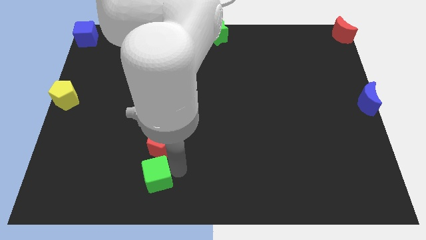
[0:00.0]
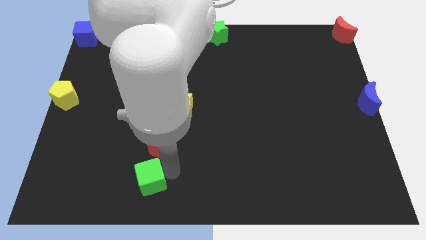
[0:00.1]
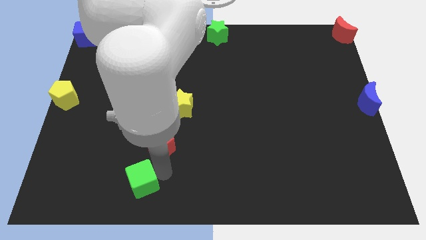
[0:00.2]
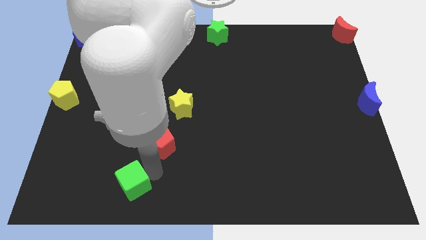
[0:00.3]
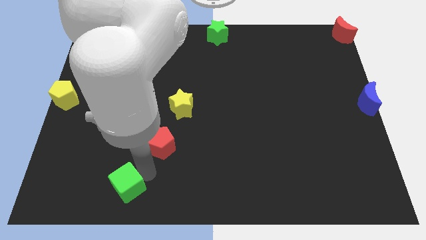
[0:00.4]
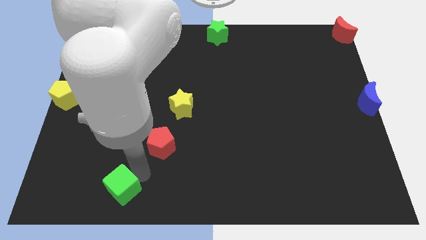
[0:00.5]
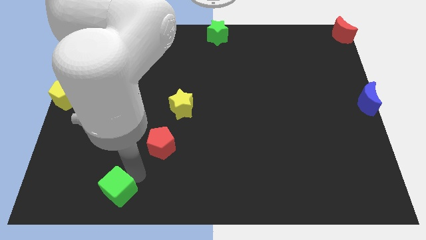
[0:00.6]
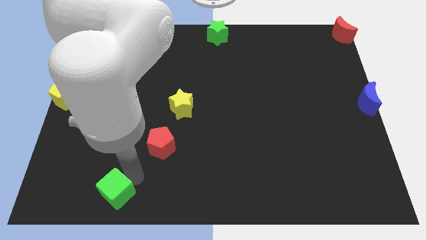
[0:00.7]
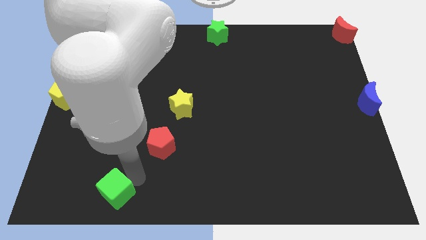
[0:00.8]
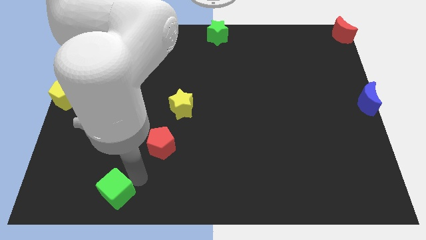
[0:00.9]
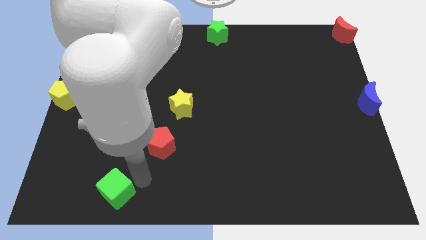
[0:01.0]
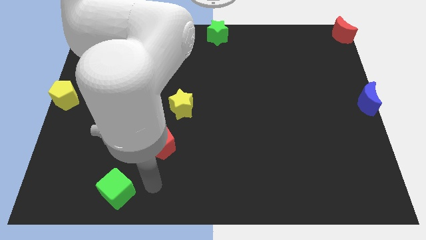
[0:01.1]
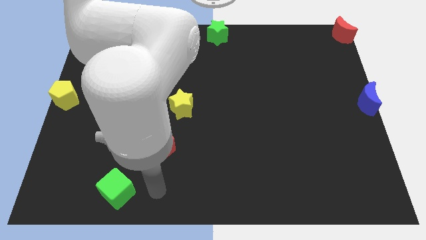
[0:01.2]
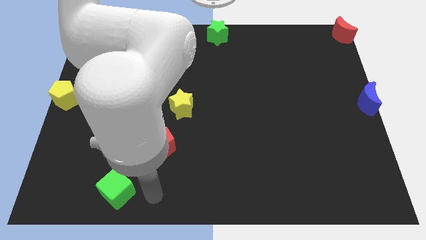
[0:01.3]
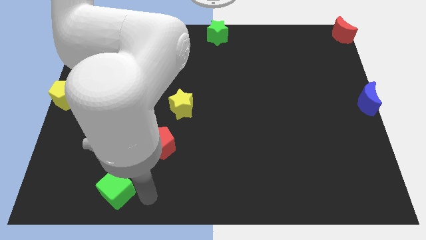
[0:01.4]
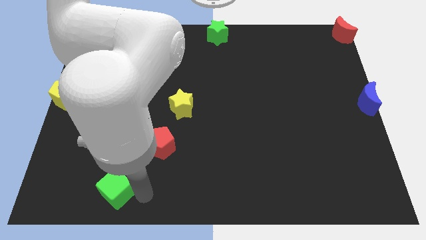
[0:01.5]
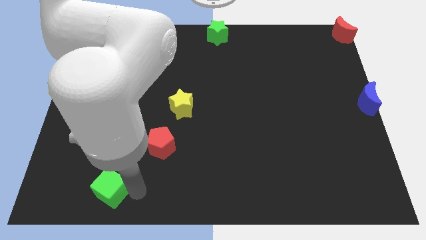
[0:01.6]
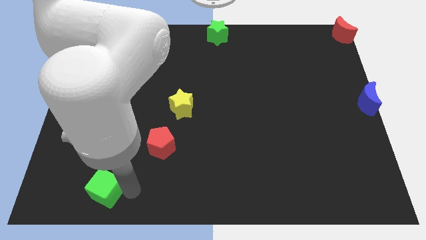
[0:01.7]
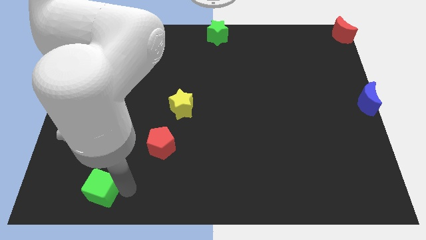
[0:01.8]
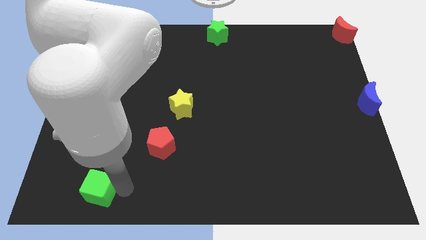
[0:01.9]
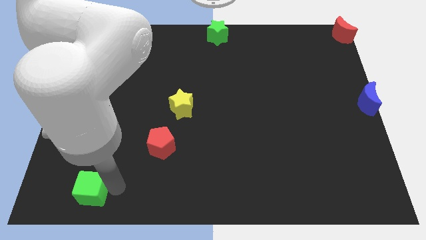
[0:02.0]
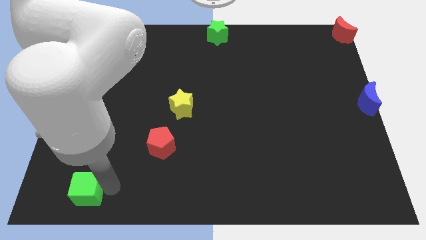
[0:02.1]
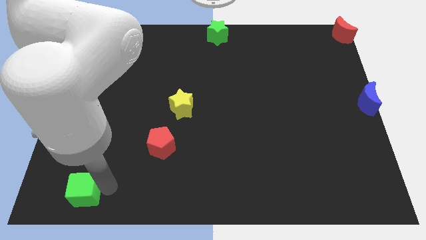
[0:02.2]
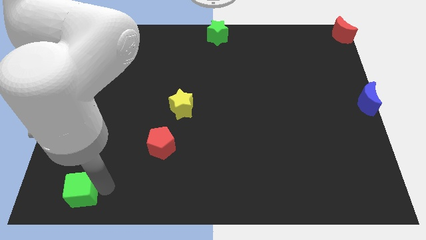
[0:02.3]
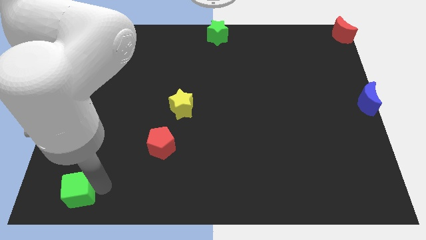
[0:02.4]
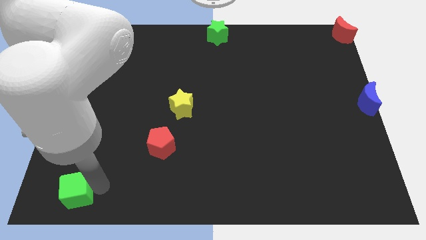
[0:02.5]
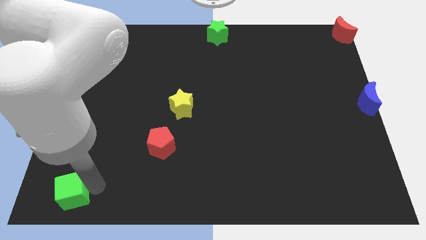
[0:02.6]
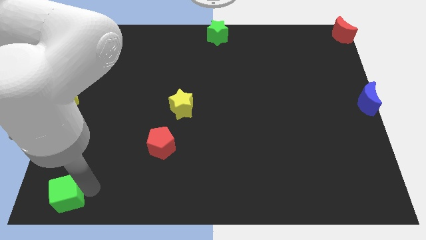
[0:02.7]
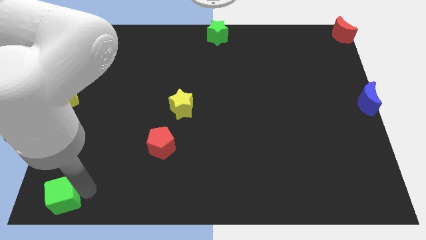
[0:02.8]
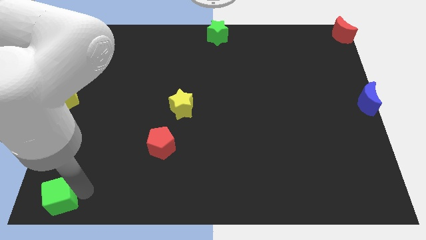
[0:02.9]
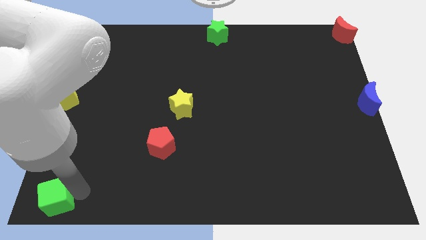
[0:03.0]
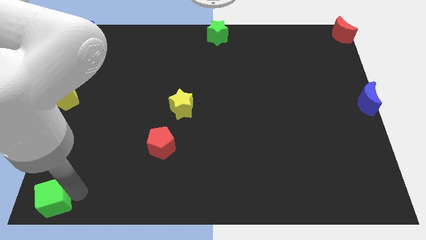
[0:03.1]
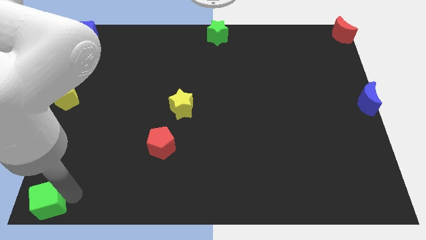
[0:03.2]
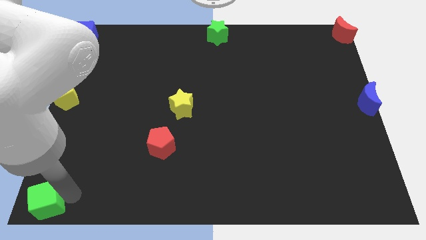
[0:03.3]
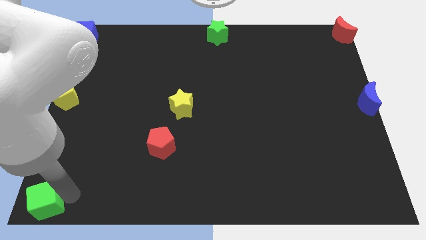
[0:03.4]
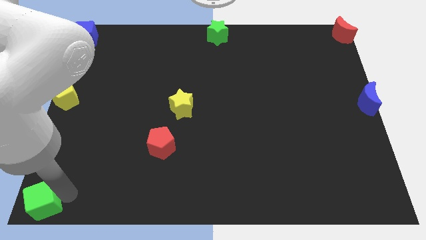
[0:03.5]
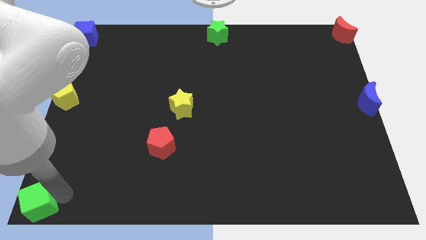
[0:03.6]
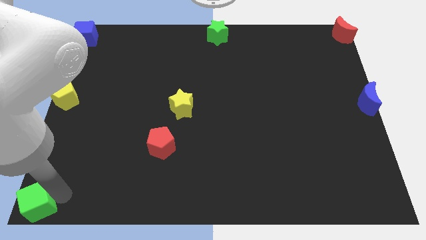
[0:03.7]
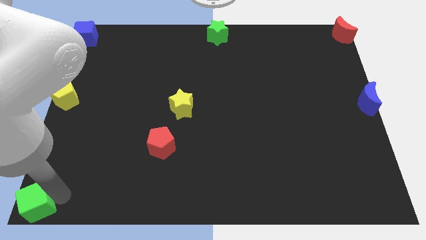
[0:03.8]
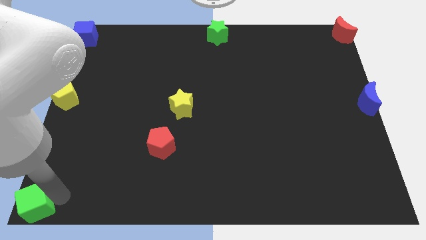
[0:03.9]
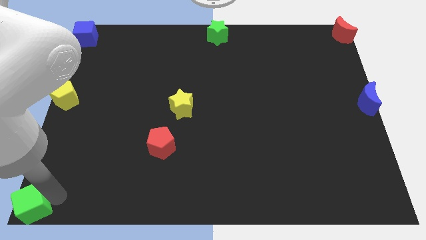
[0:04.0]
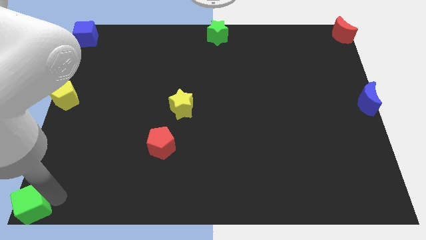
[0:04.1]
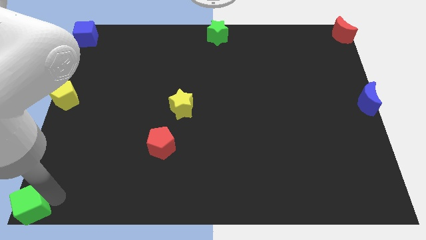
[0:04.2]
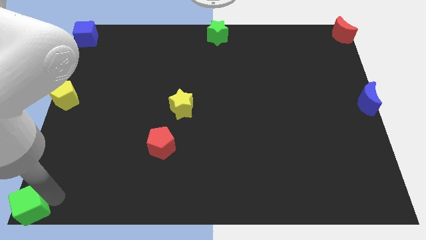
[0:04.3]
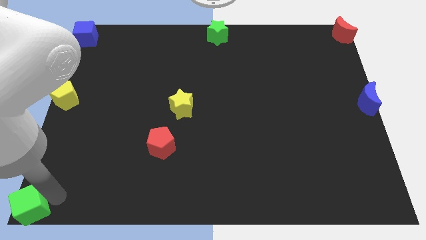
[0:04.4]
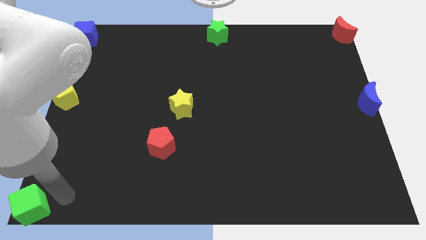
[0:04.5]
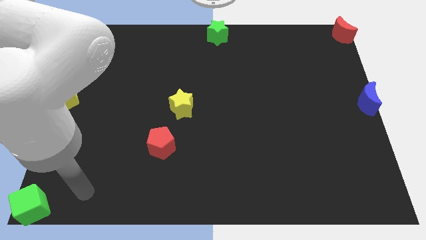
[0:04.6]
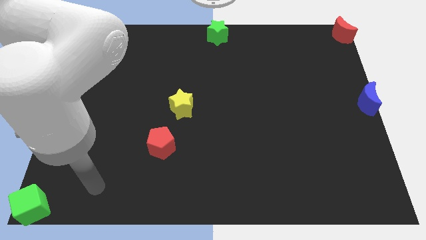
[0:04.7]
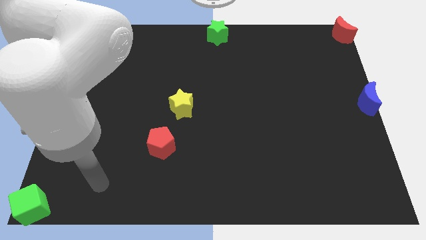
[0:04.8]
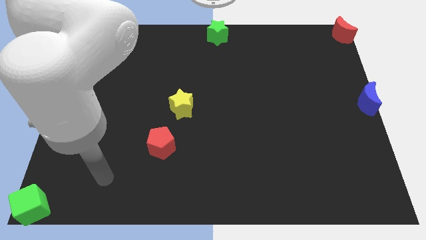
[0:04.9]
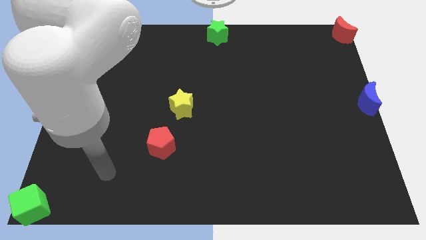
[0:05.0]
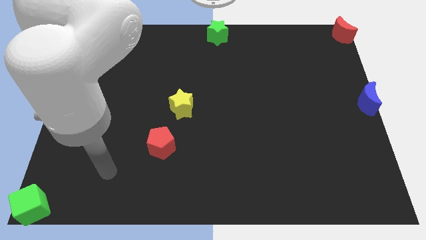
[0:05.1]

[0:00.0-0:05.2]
move the green cube bottom left corner of the board

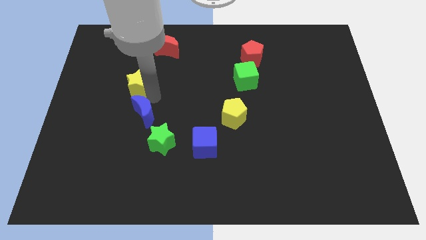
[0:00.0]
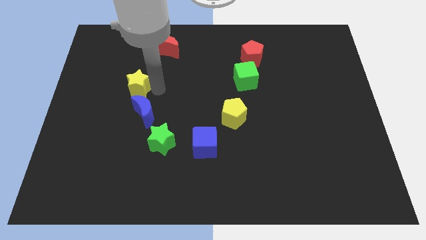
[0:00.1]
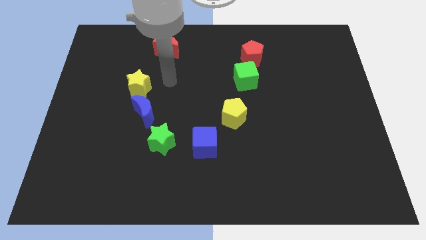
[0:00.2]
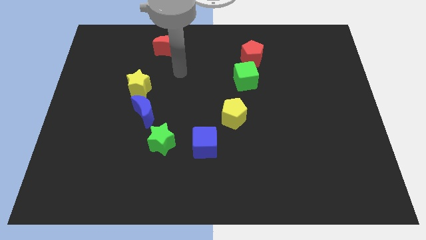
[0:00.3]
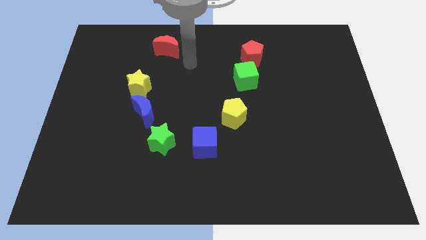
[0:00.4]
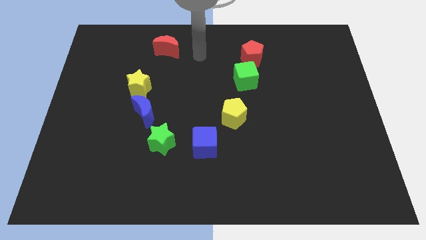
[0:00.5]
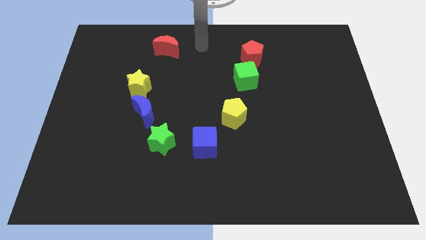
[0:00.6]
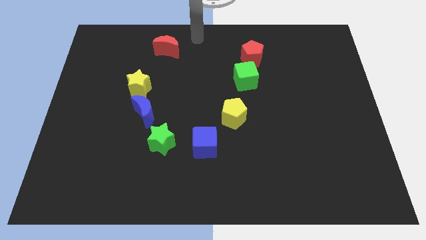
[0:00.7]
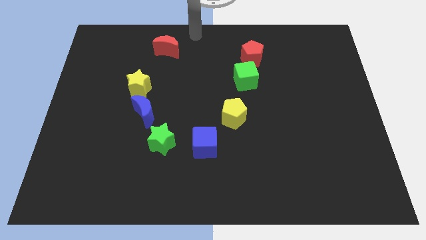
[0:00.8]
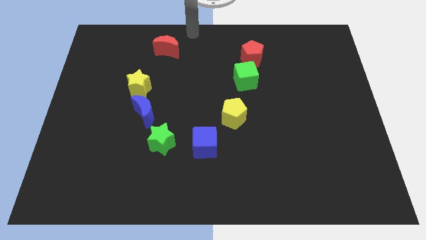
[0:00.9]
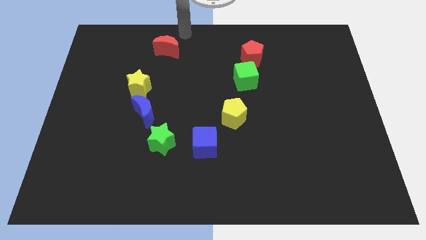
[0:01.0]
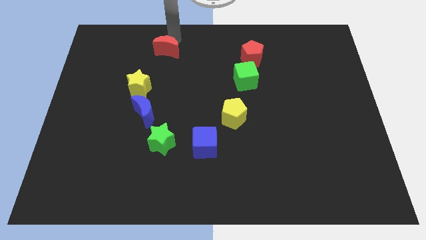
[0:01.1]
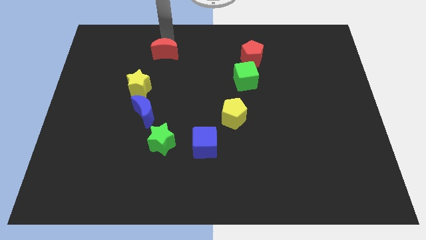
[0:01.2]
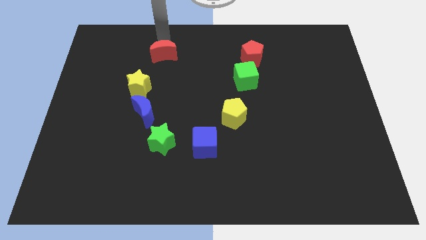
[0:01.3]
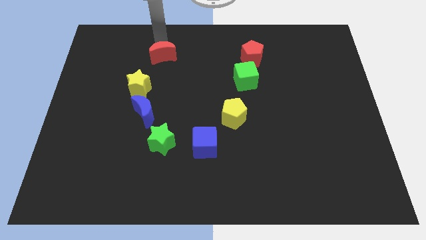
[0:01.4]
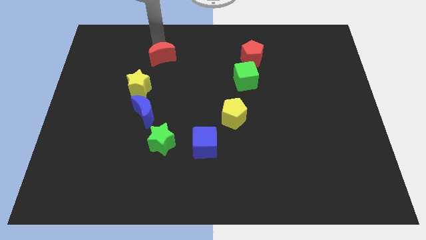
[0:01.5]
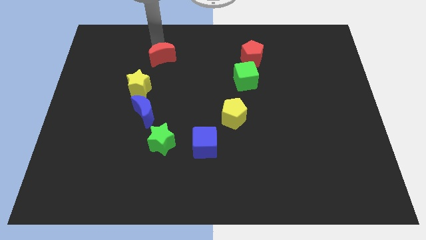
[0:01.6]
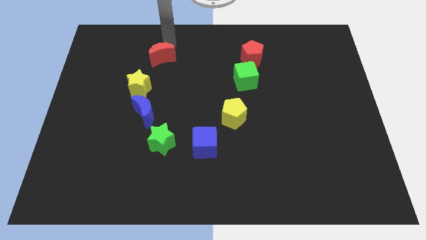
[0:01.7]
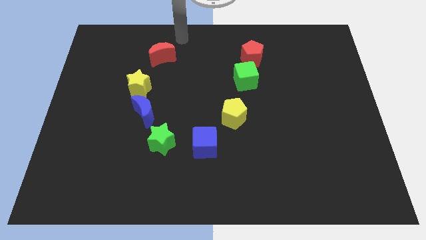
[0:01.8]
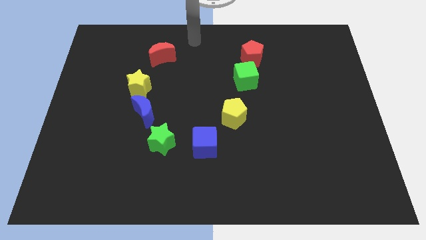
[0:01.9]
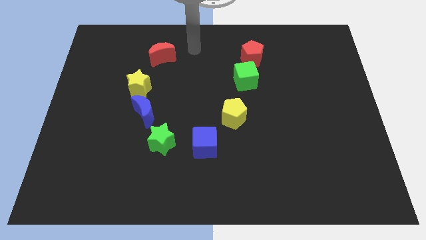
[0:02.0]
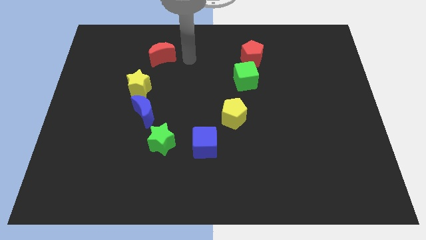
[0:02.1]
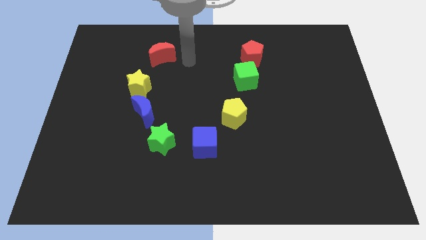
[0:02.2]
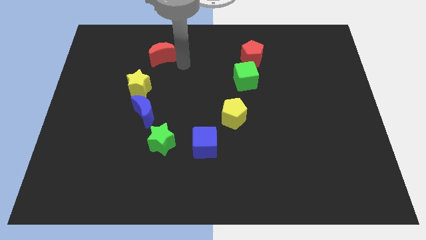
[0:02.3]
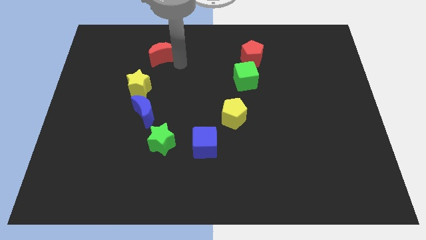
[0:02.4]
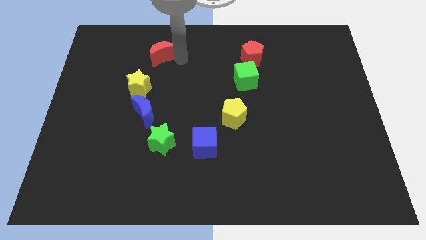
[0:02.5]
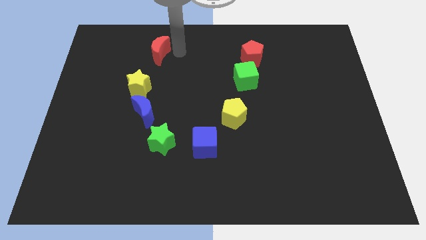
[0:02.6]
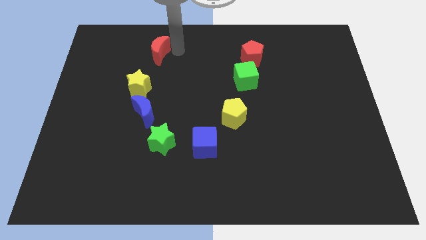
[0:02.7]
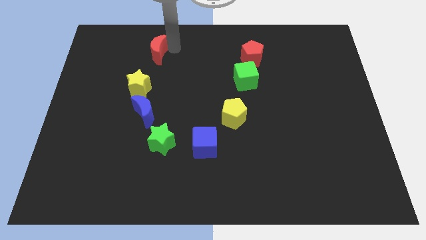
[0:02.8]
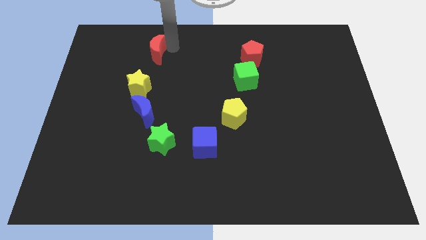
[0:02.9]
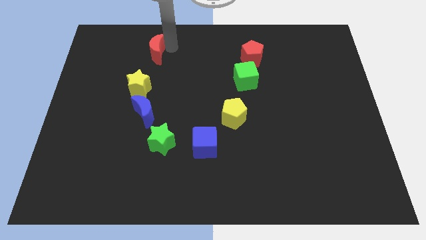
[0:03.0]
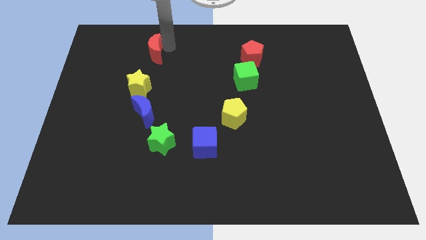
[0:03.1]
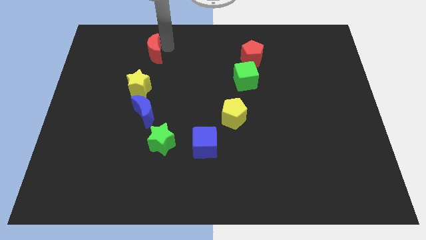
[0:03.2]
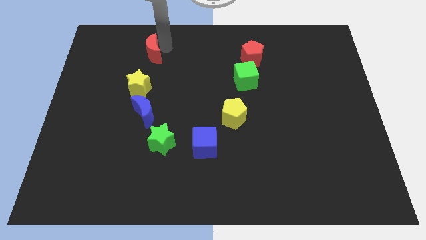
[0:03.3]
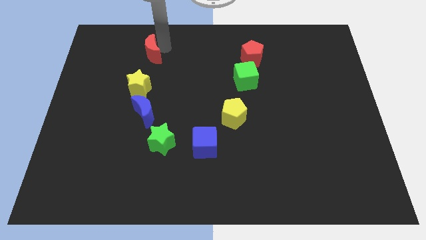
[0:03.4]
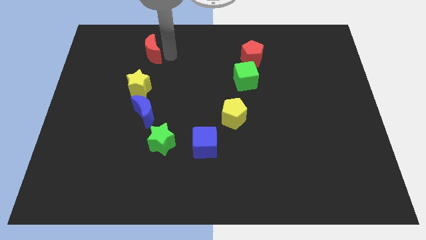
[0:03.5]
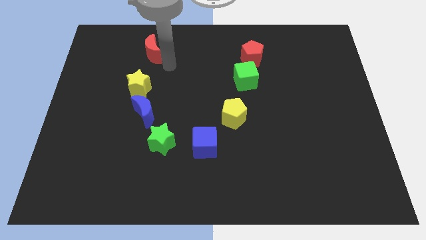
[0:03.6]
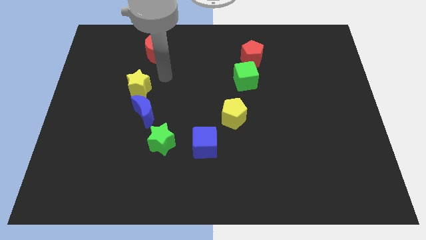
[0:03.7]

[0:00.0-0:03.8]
adjust the red moon above yellow star
